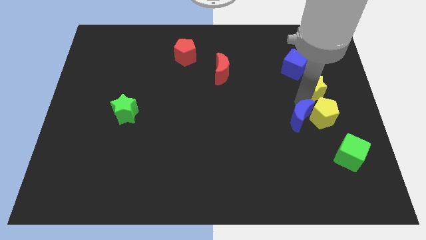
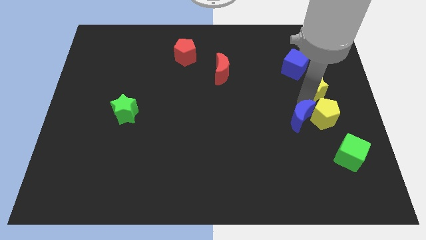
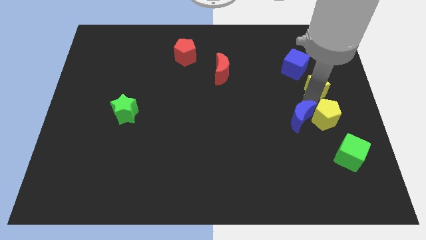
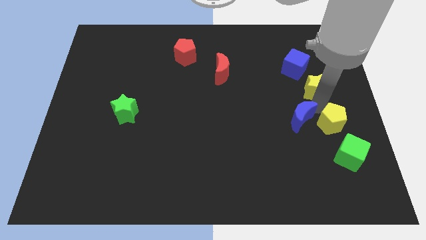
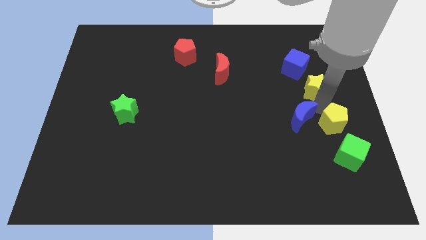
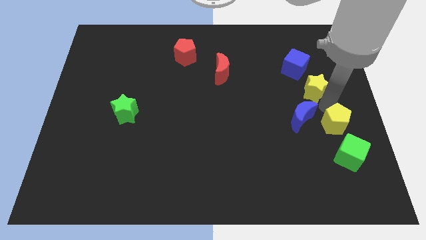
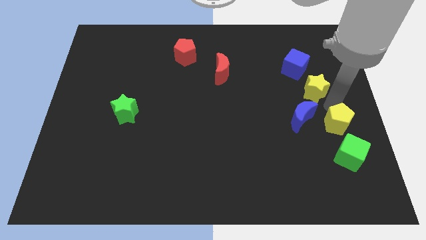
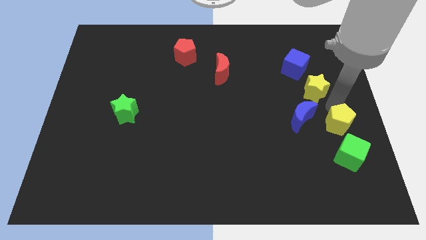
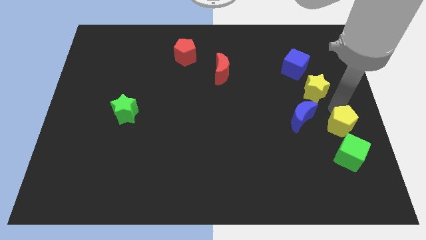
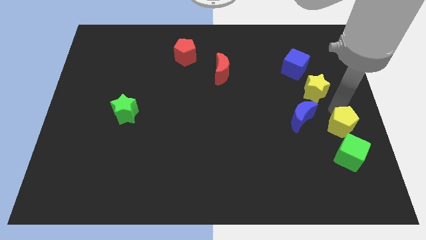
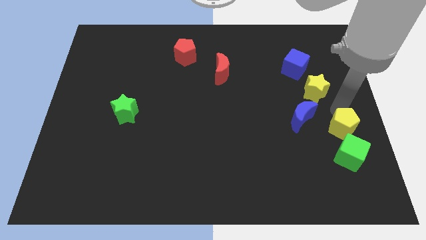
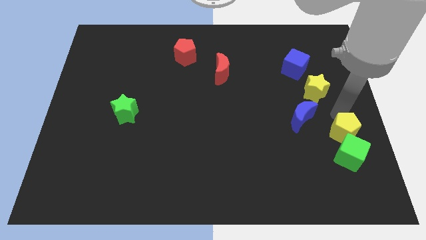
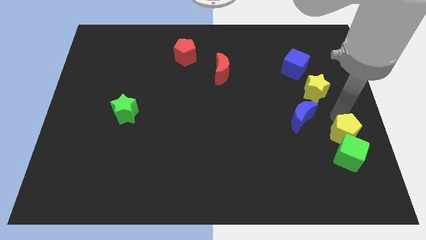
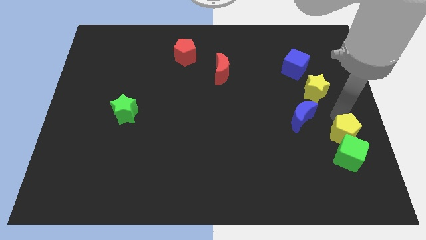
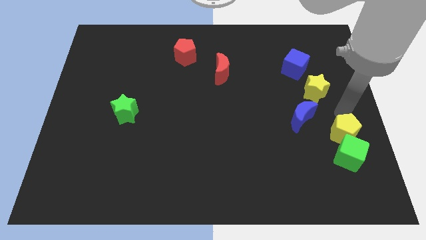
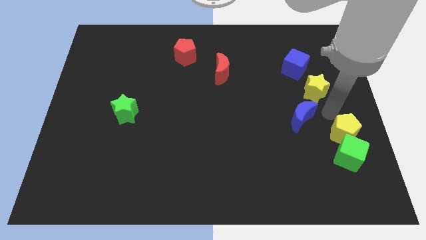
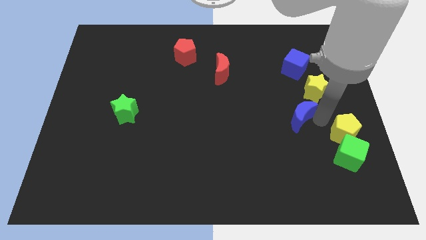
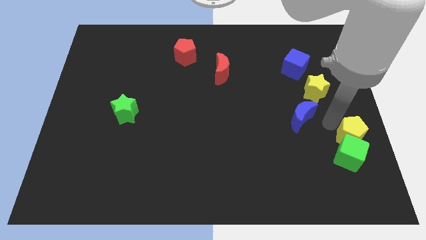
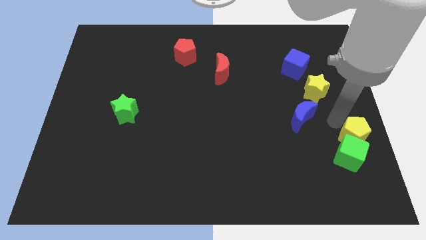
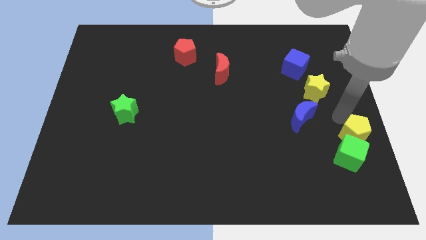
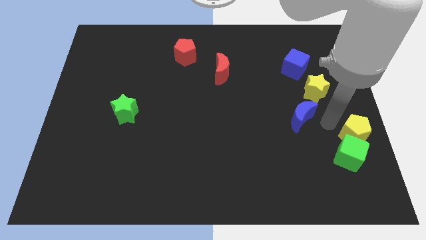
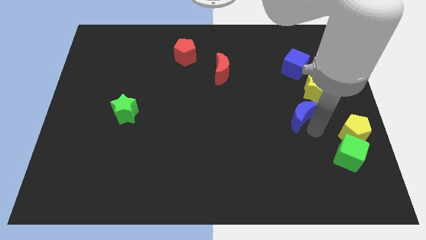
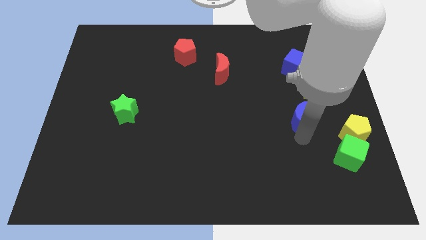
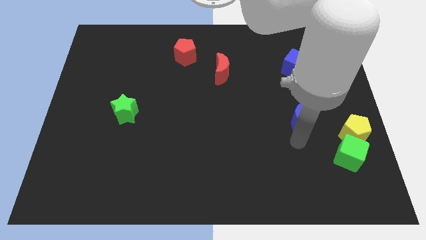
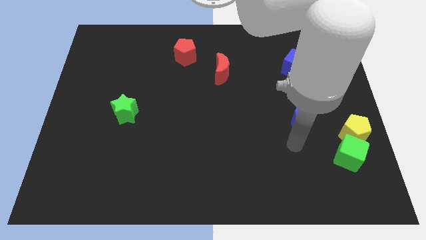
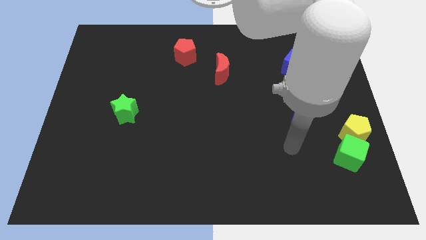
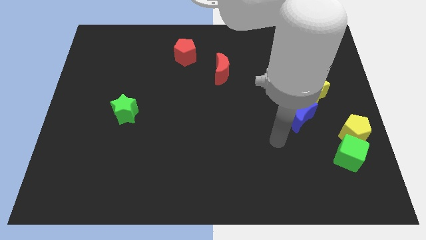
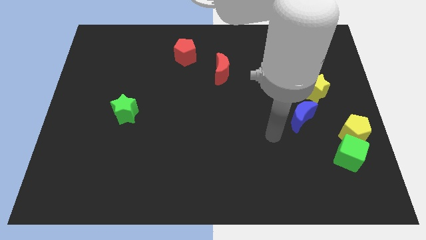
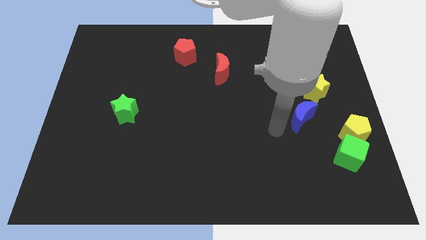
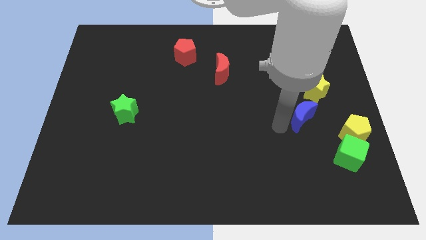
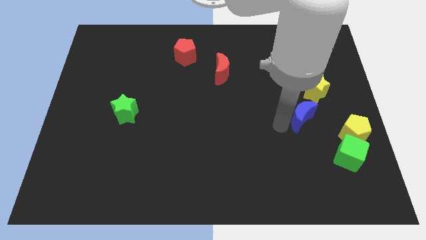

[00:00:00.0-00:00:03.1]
place yellow pentagon on top of green cube

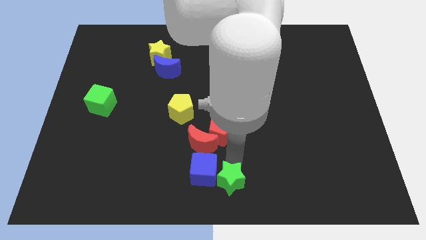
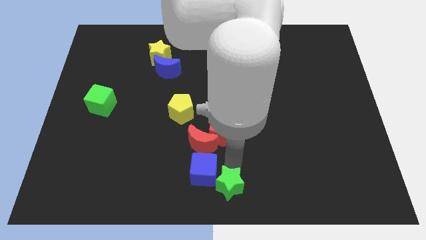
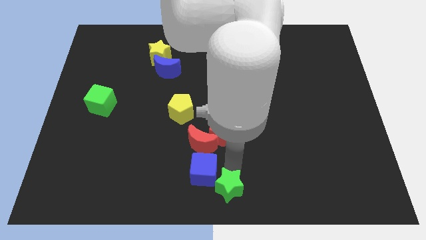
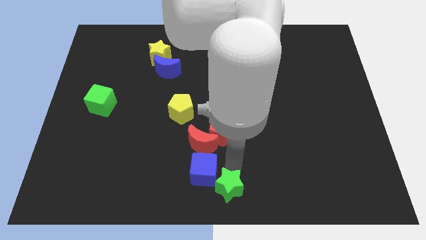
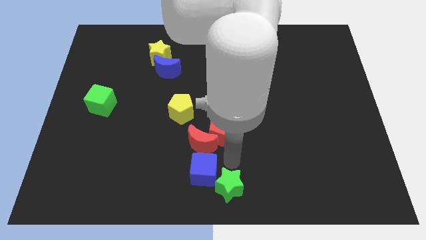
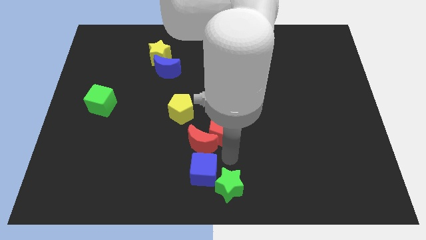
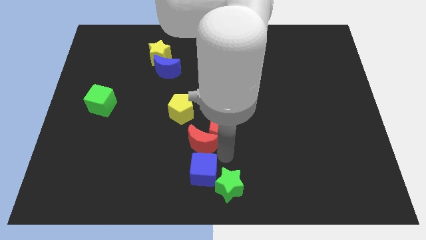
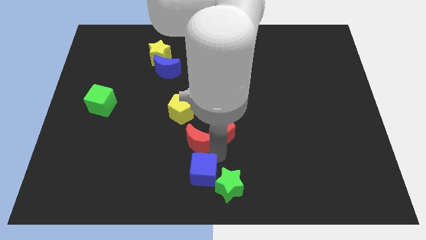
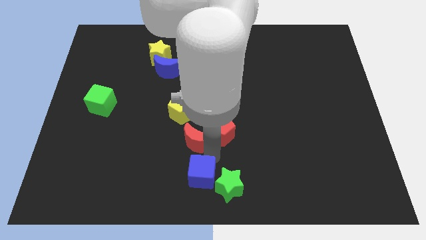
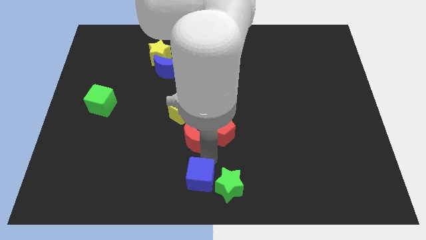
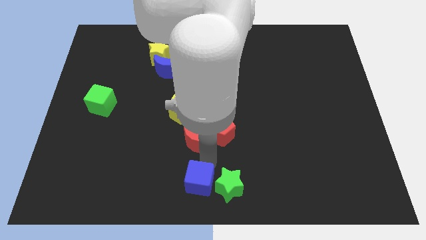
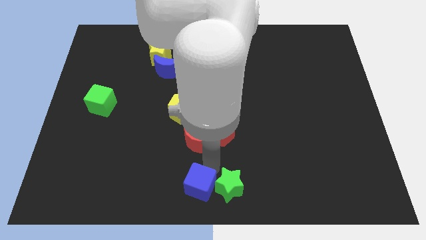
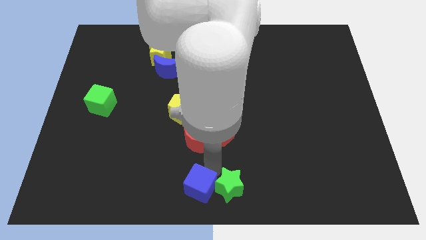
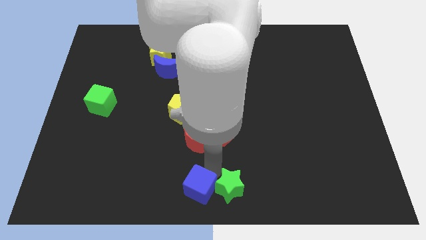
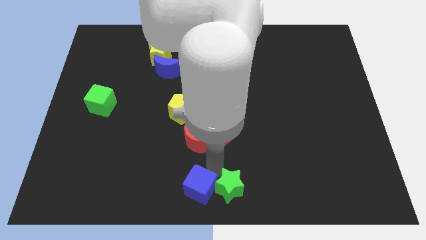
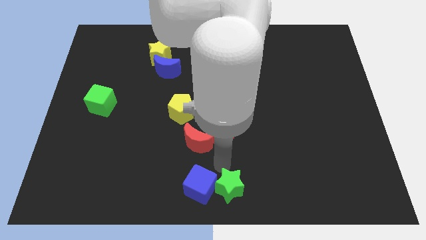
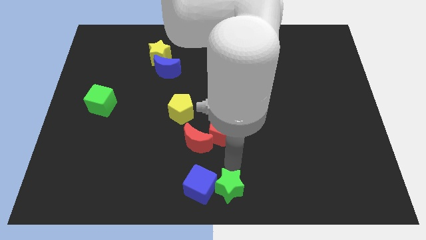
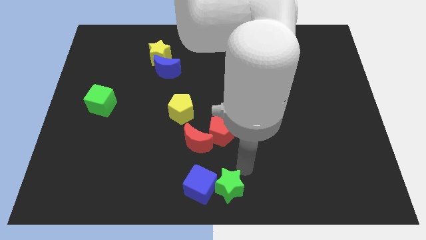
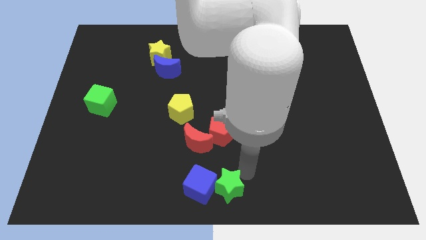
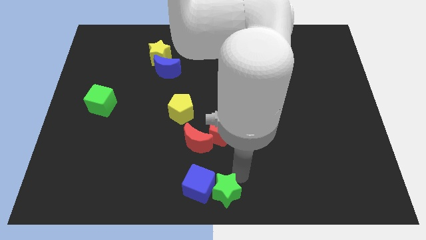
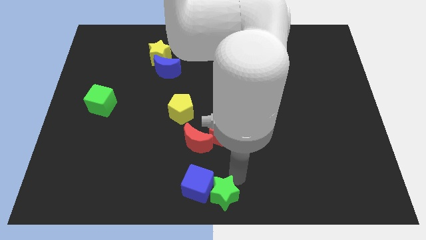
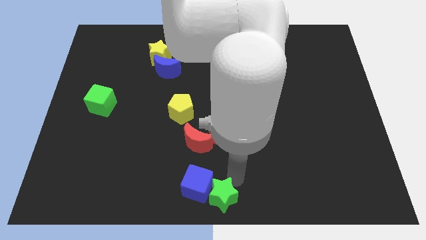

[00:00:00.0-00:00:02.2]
push the blue cube and green star towards center bottom of the board

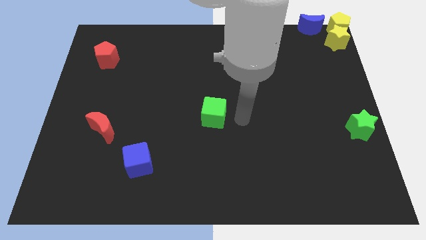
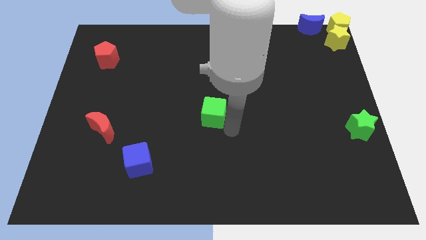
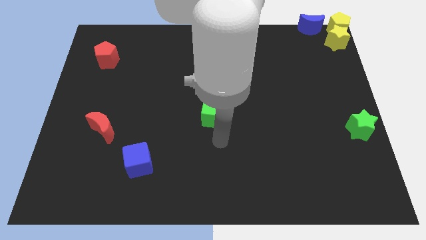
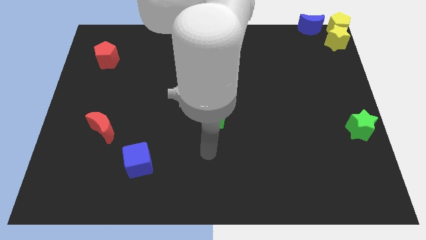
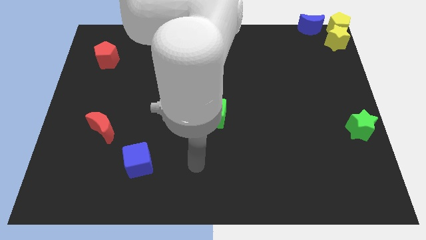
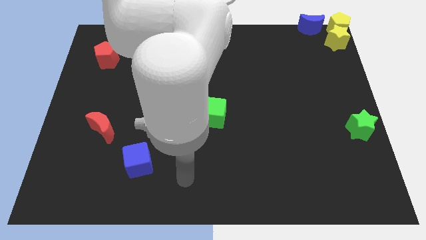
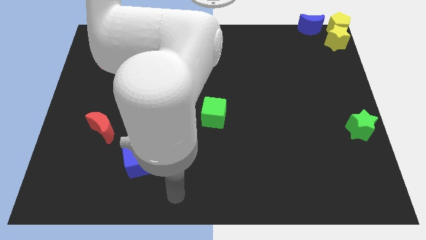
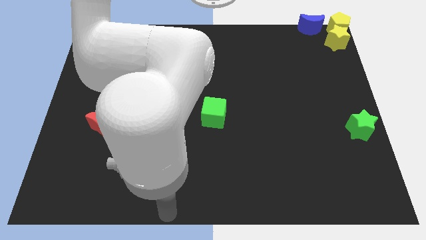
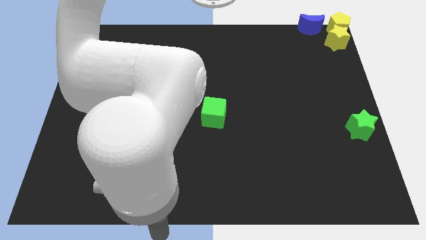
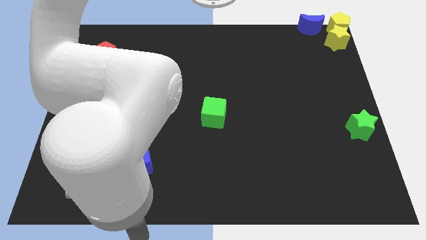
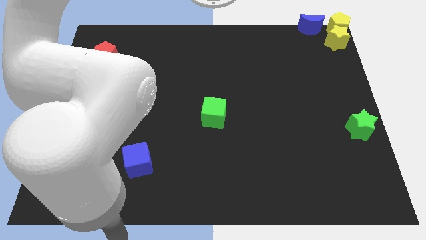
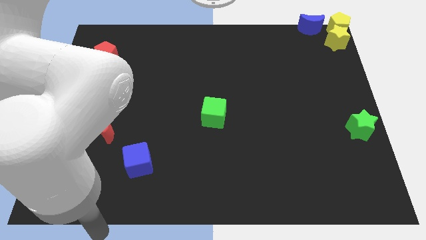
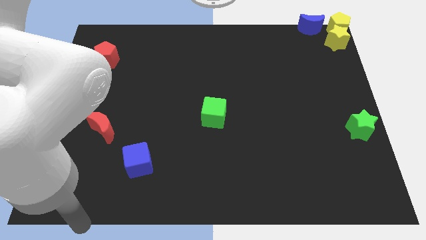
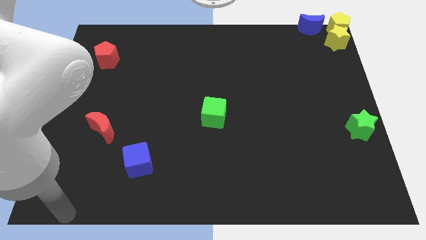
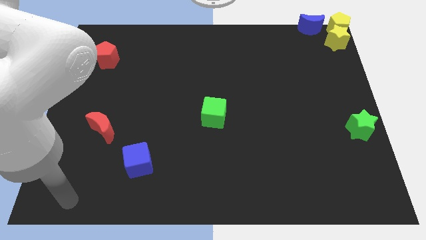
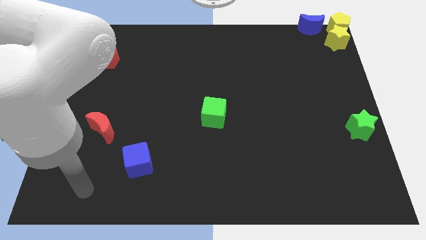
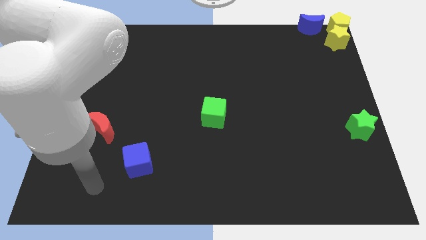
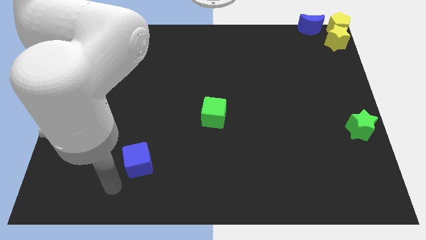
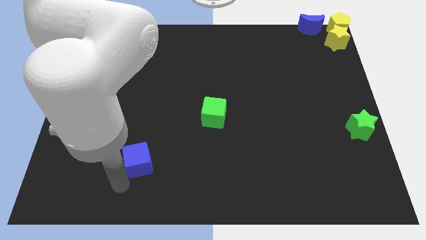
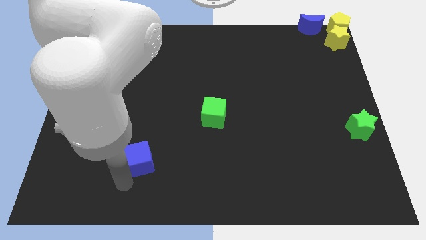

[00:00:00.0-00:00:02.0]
move your arm towards the blue cube

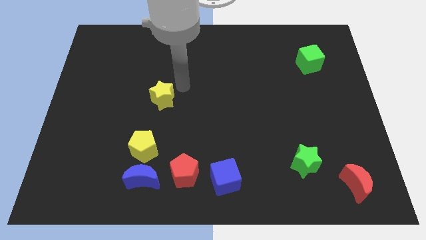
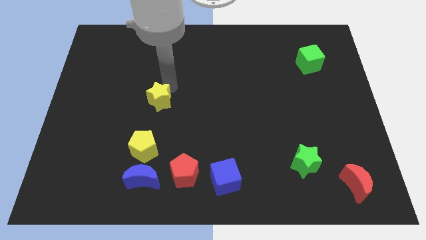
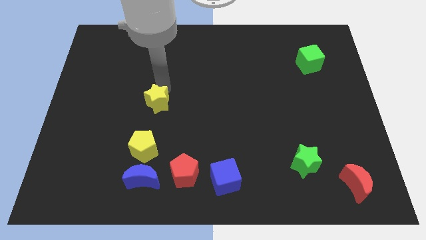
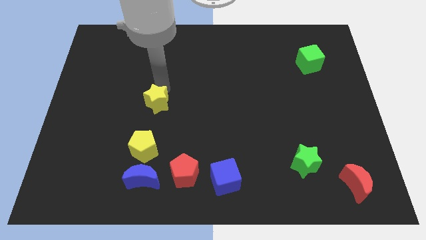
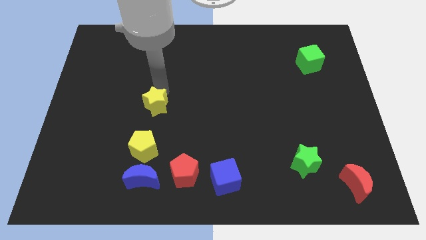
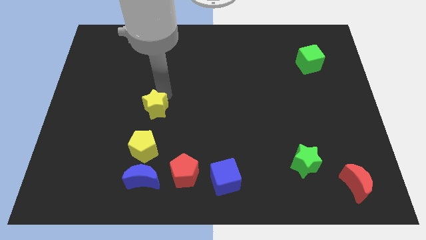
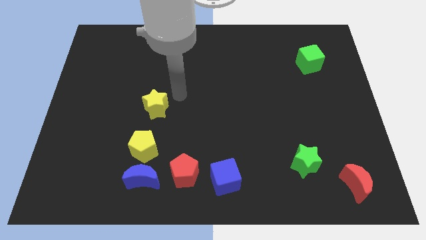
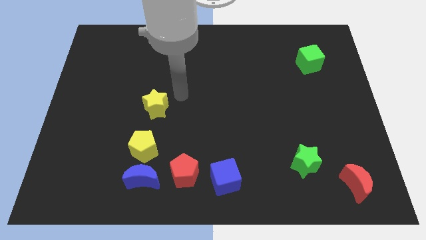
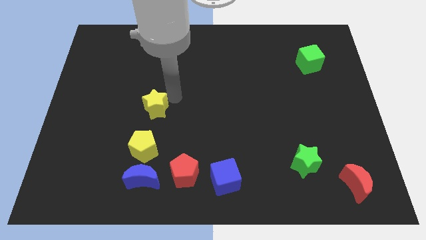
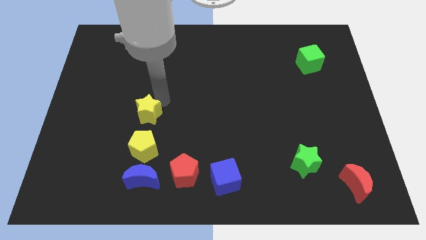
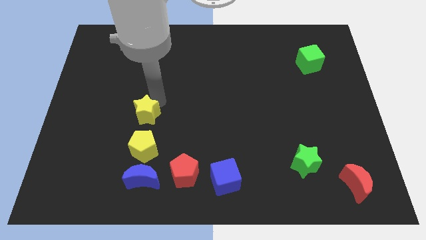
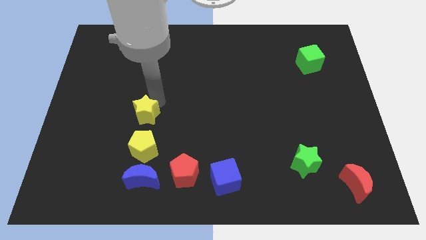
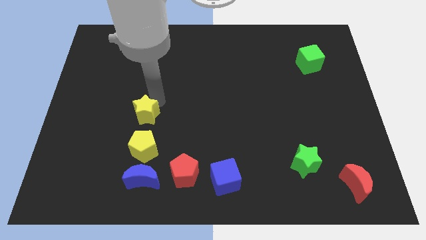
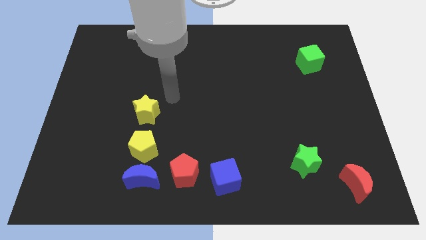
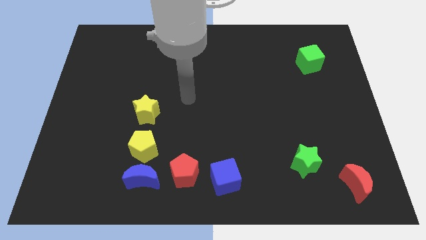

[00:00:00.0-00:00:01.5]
move the yellow star to the top of yellow pentagon to form a vertical line
